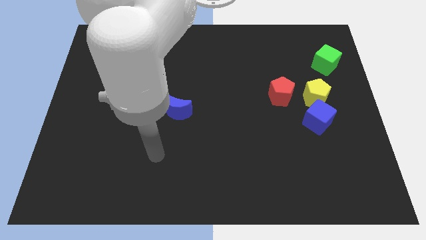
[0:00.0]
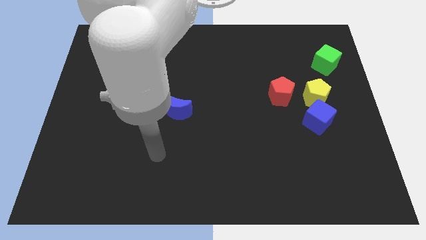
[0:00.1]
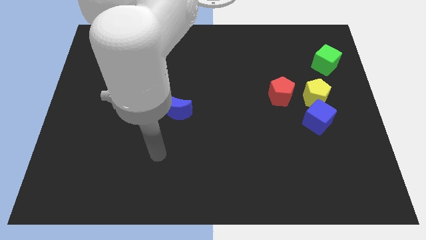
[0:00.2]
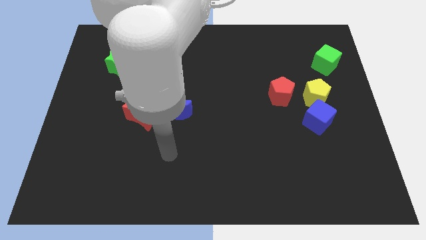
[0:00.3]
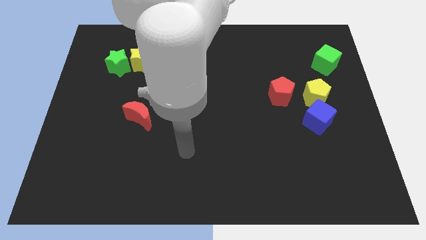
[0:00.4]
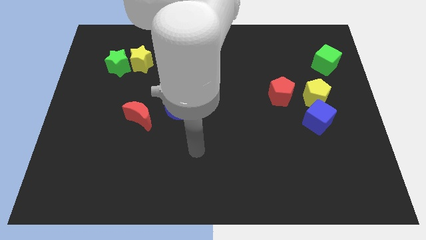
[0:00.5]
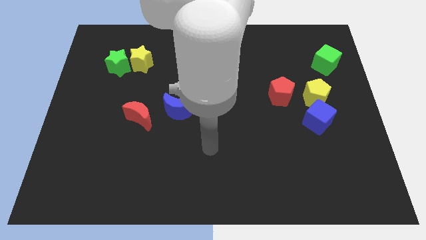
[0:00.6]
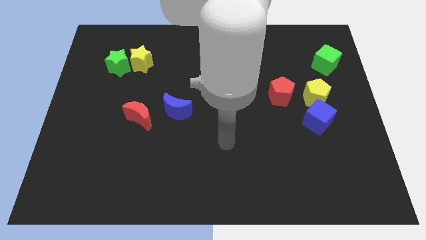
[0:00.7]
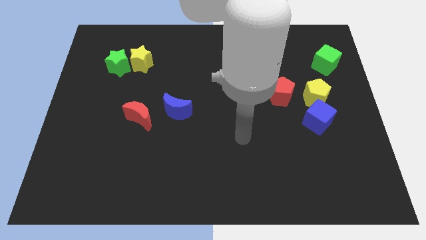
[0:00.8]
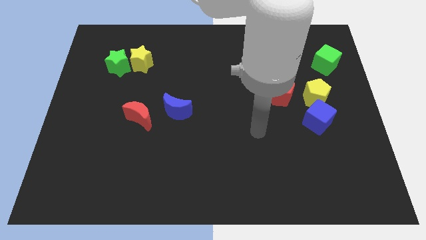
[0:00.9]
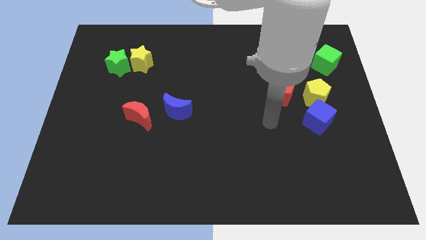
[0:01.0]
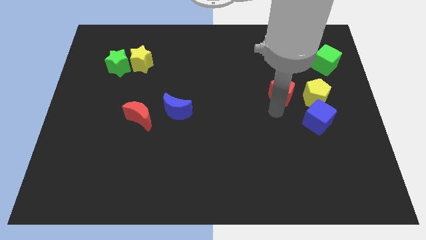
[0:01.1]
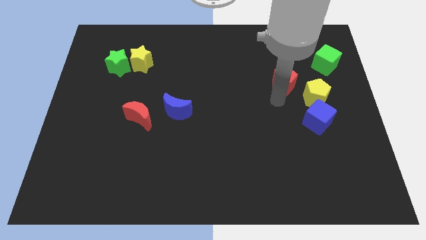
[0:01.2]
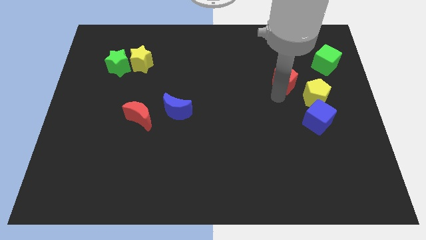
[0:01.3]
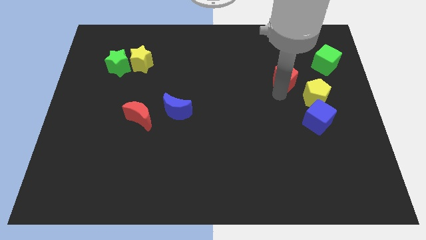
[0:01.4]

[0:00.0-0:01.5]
touch the red pentagon

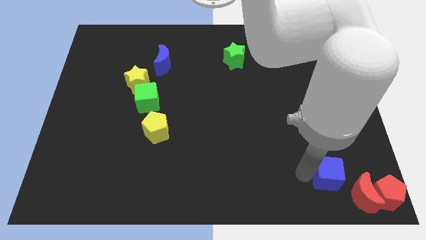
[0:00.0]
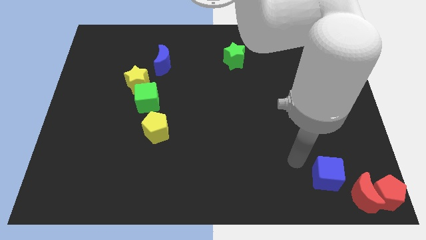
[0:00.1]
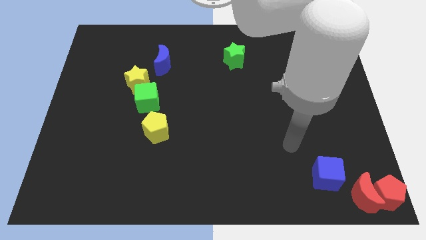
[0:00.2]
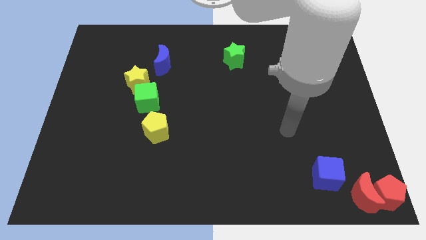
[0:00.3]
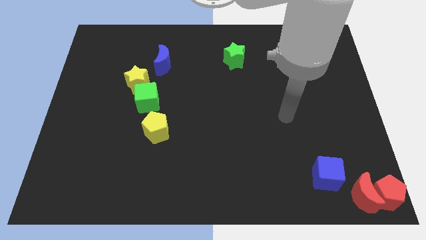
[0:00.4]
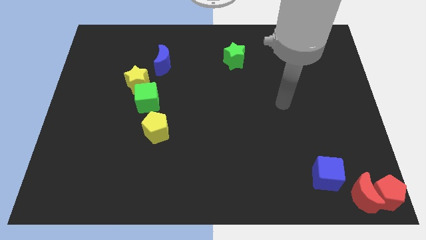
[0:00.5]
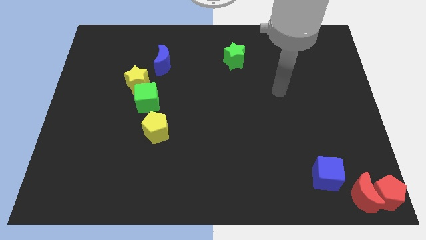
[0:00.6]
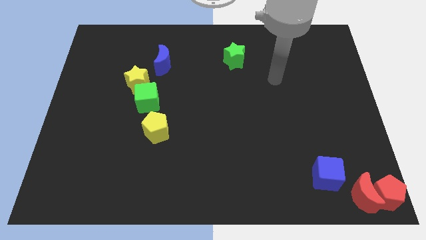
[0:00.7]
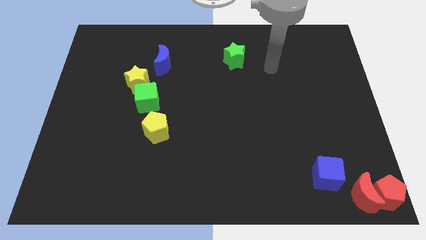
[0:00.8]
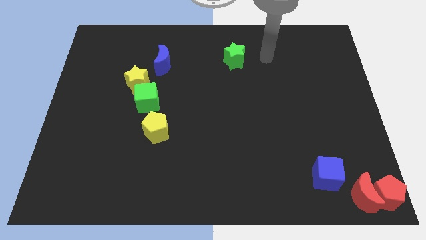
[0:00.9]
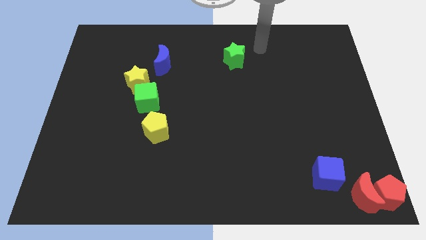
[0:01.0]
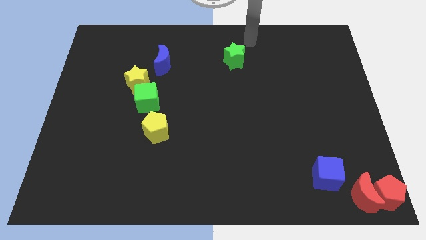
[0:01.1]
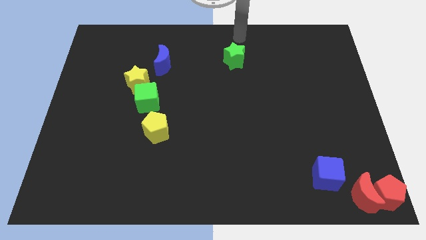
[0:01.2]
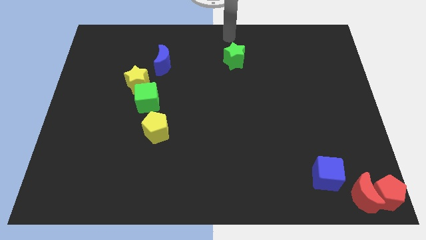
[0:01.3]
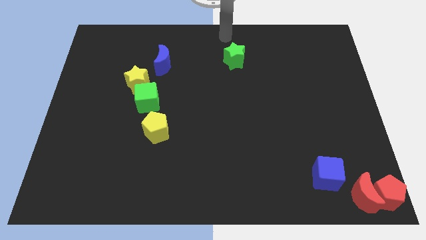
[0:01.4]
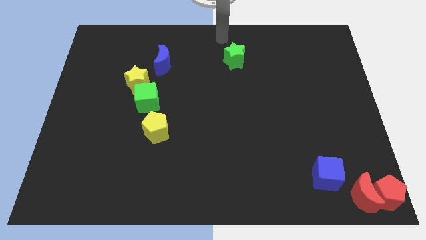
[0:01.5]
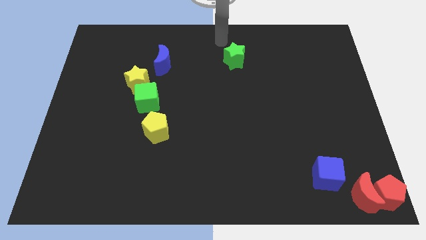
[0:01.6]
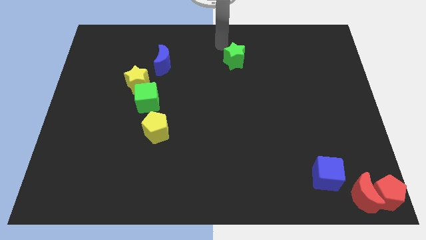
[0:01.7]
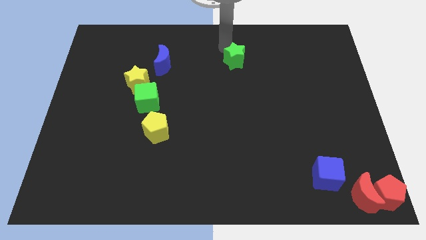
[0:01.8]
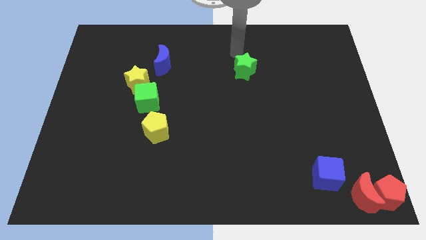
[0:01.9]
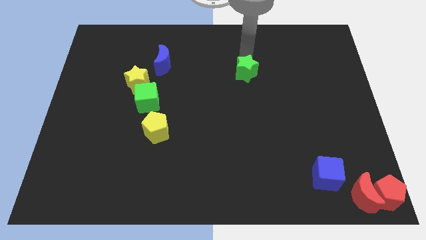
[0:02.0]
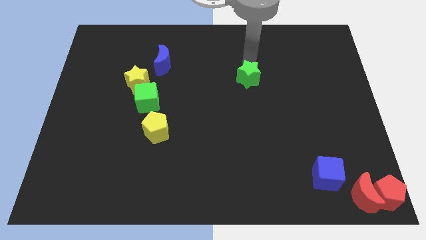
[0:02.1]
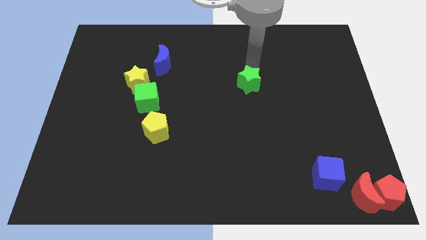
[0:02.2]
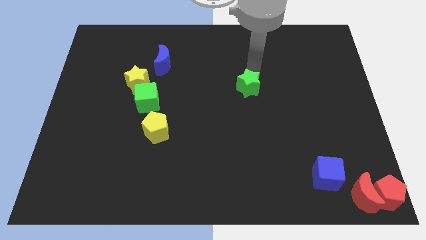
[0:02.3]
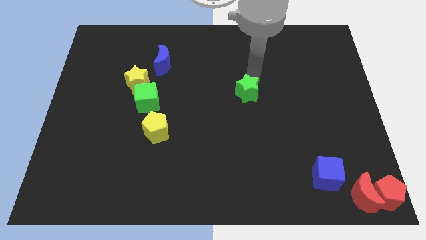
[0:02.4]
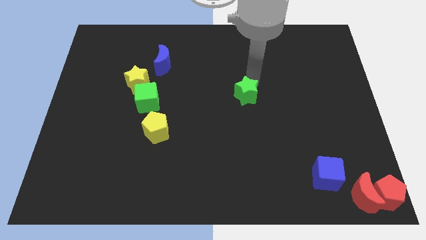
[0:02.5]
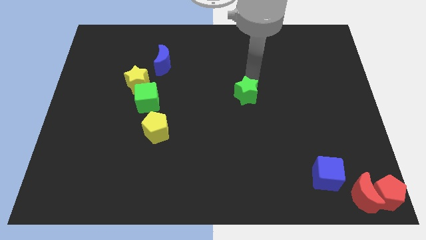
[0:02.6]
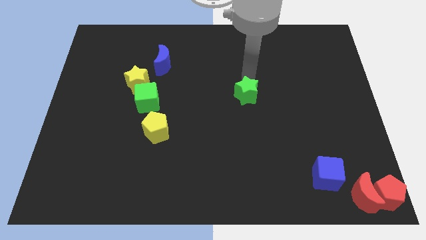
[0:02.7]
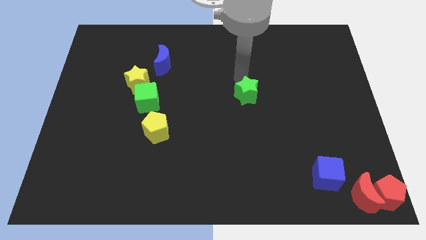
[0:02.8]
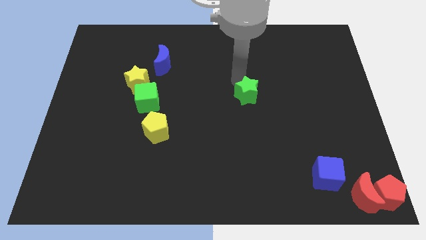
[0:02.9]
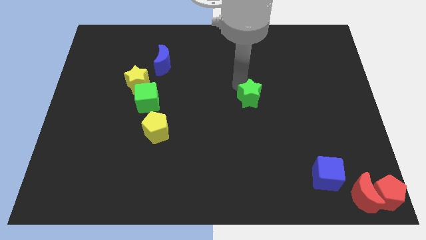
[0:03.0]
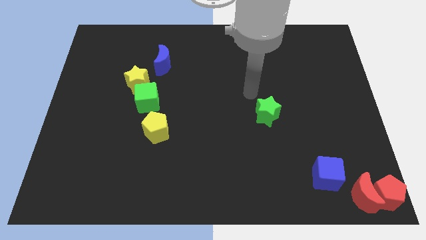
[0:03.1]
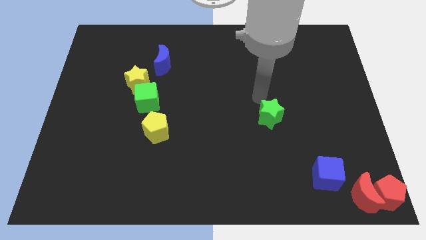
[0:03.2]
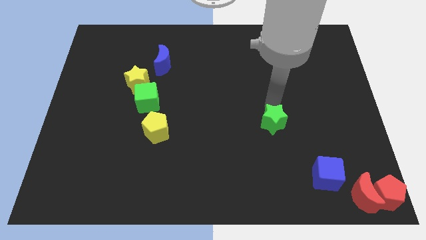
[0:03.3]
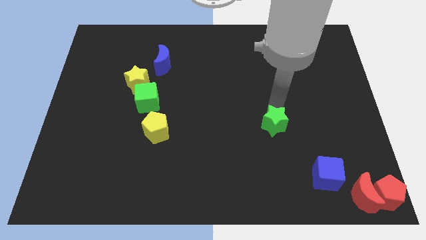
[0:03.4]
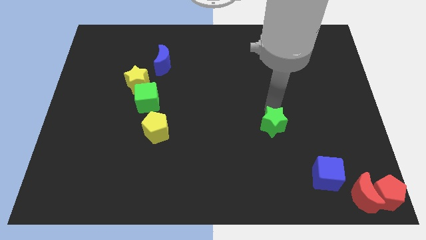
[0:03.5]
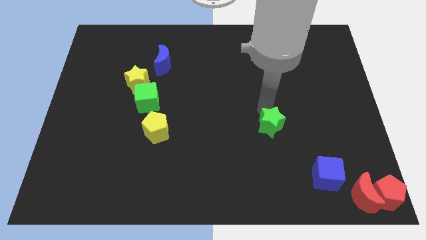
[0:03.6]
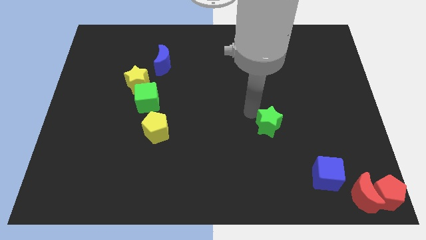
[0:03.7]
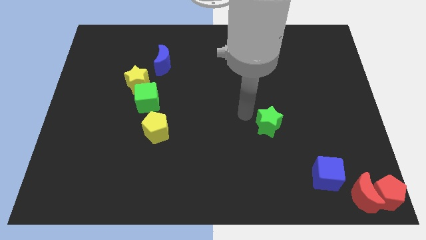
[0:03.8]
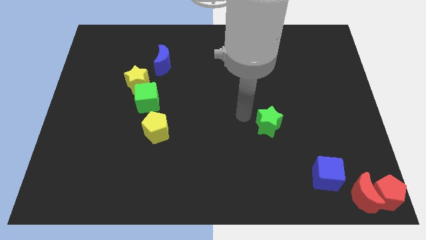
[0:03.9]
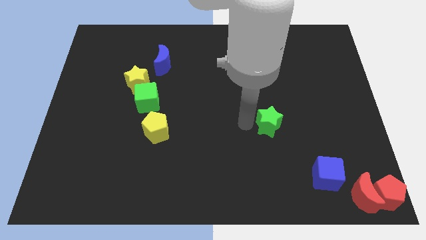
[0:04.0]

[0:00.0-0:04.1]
slide the green star towards the top side of the blue cube

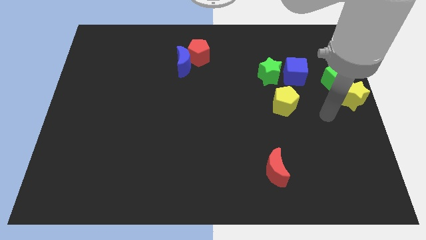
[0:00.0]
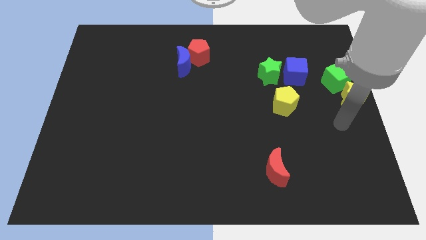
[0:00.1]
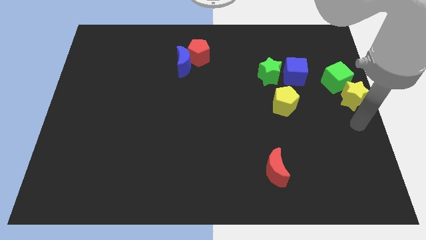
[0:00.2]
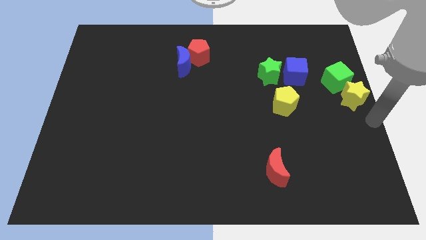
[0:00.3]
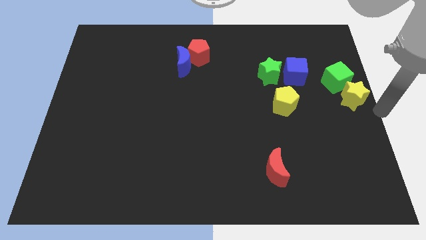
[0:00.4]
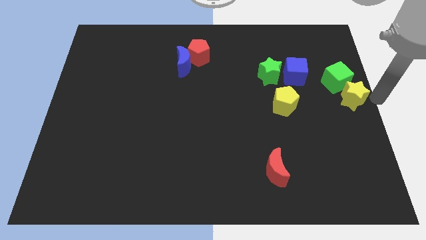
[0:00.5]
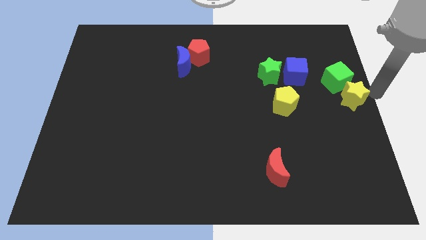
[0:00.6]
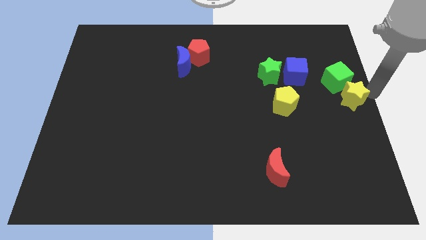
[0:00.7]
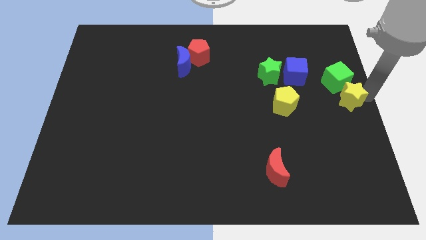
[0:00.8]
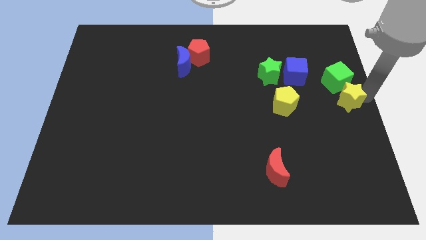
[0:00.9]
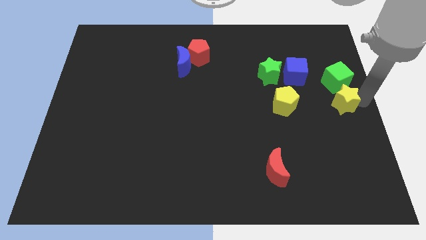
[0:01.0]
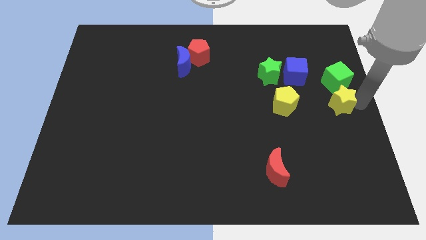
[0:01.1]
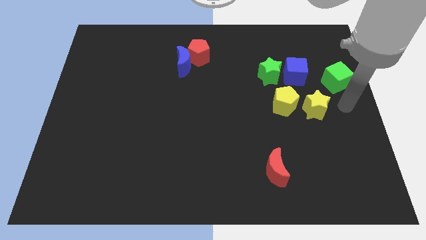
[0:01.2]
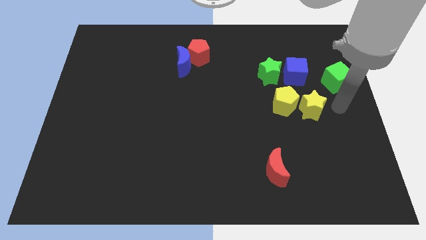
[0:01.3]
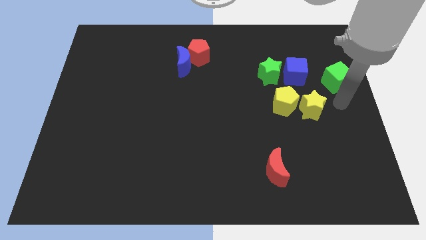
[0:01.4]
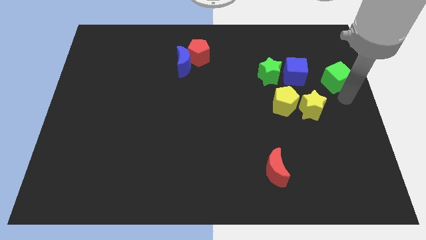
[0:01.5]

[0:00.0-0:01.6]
adjust the yellow star to the left side of the yellow pentagon

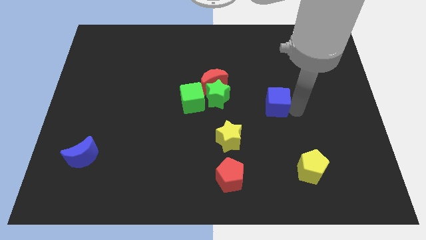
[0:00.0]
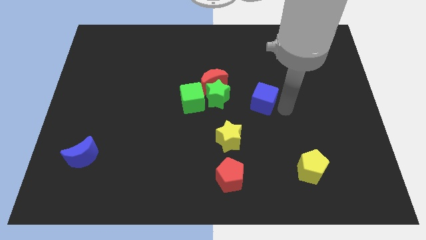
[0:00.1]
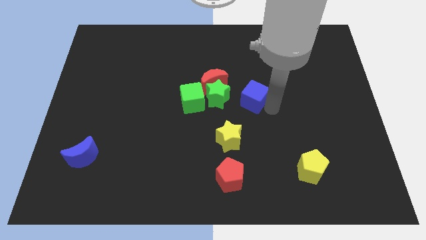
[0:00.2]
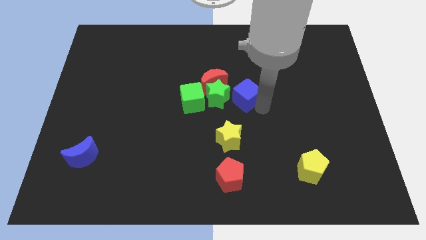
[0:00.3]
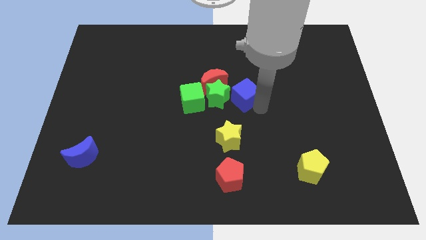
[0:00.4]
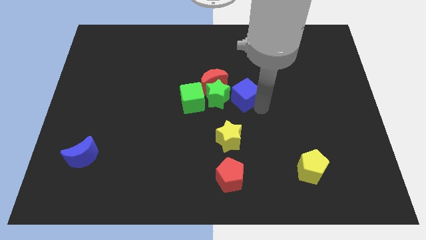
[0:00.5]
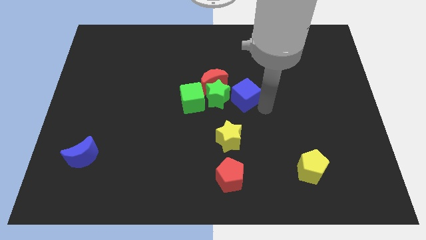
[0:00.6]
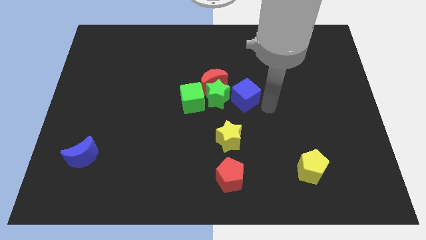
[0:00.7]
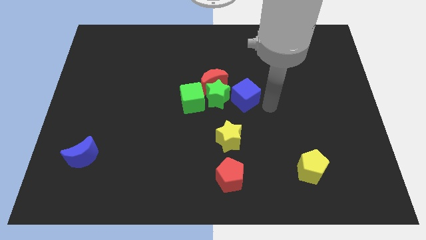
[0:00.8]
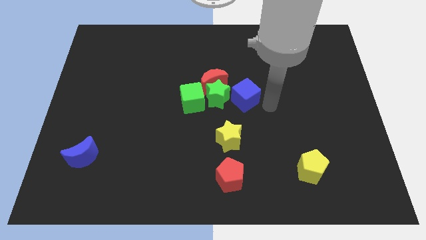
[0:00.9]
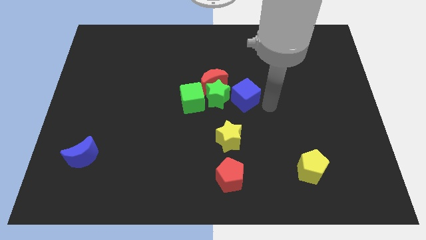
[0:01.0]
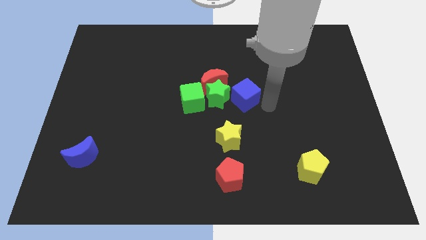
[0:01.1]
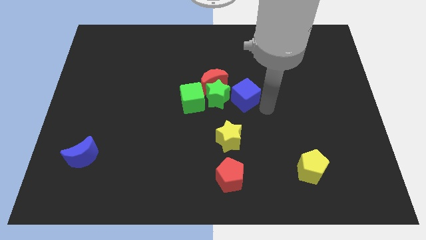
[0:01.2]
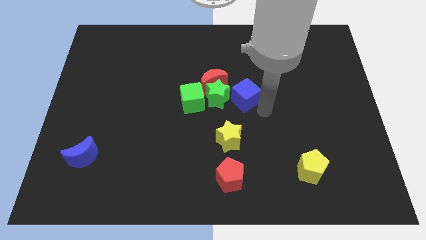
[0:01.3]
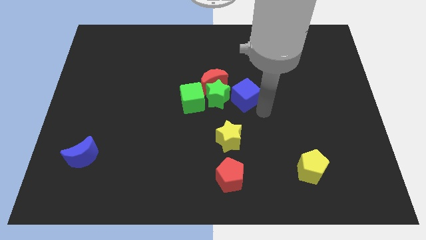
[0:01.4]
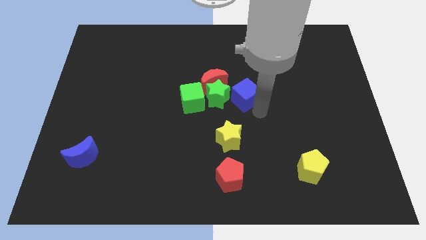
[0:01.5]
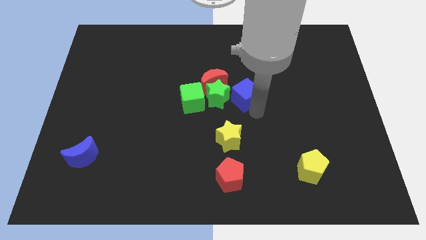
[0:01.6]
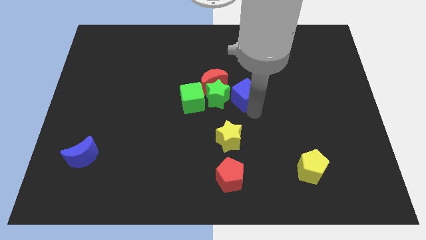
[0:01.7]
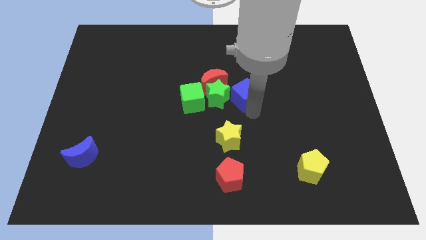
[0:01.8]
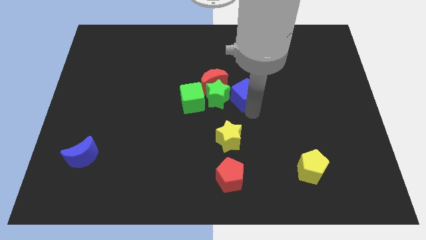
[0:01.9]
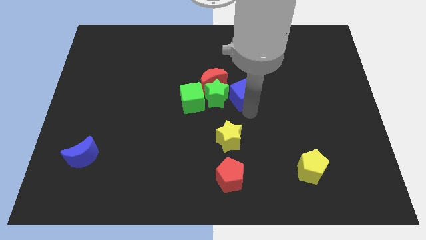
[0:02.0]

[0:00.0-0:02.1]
push blue cube into the green star
